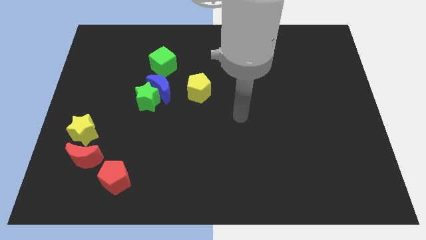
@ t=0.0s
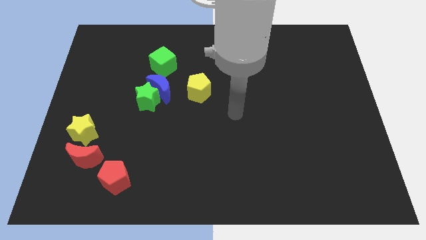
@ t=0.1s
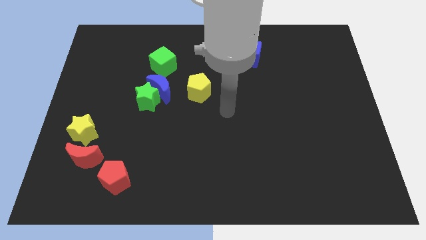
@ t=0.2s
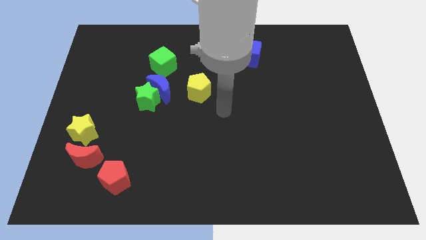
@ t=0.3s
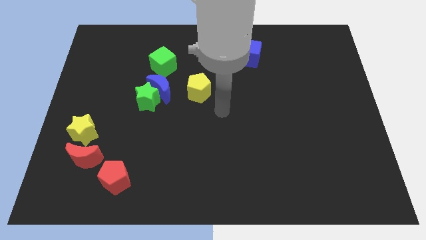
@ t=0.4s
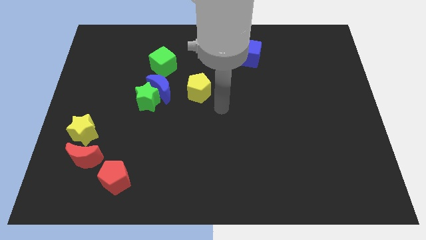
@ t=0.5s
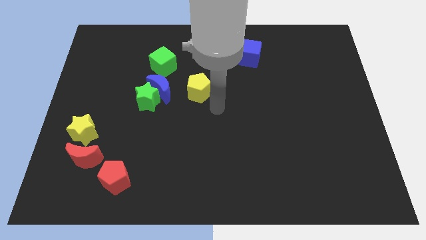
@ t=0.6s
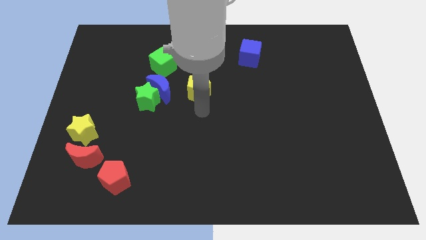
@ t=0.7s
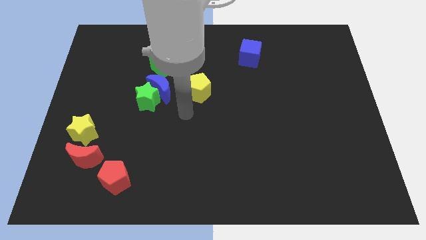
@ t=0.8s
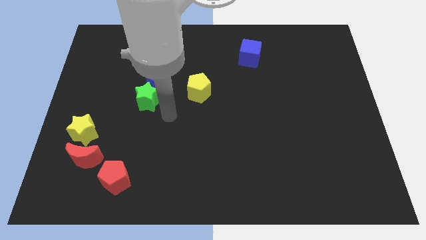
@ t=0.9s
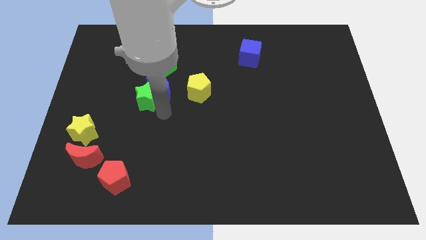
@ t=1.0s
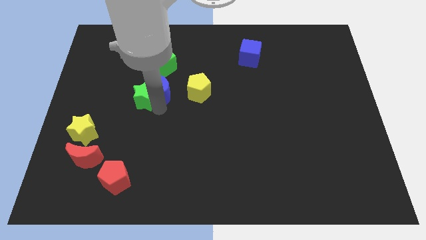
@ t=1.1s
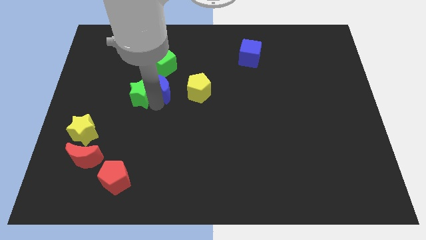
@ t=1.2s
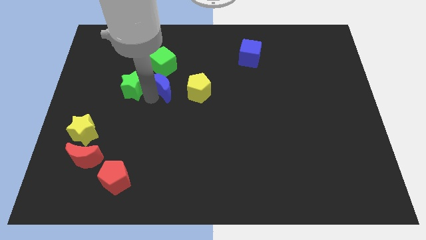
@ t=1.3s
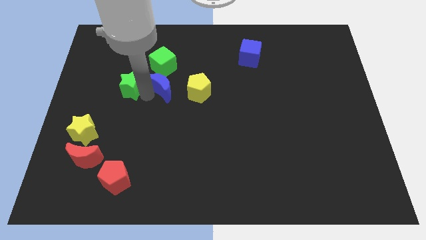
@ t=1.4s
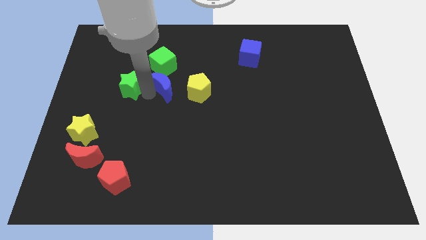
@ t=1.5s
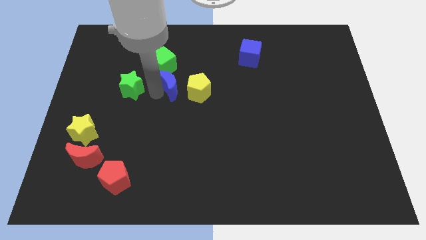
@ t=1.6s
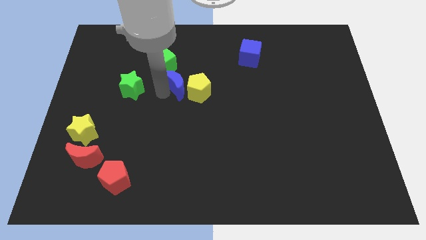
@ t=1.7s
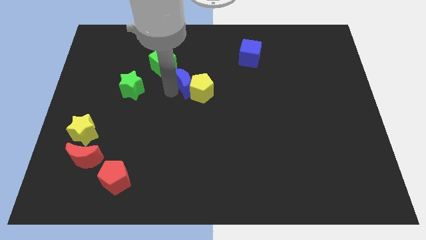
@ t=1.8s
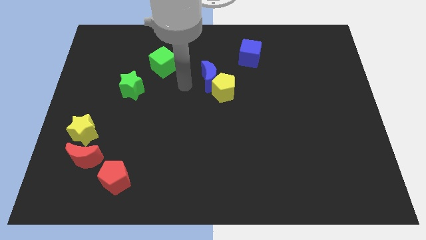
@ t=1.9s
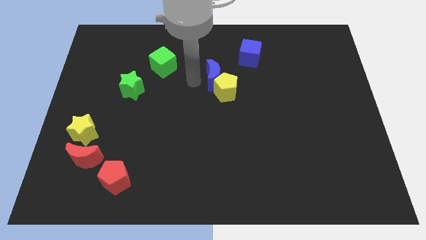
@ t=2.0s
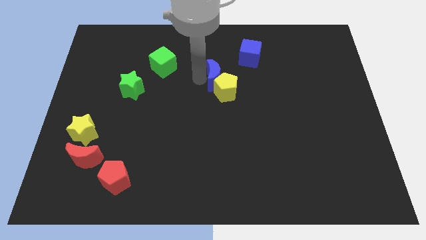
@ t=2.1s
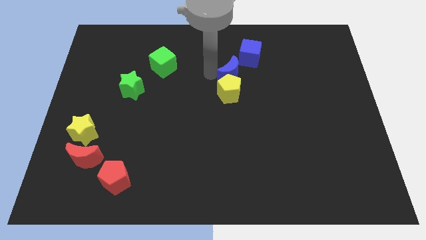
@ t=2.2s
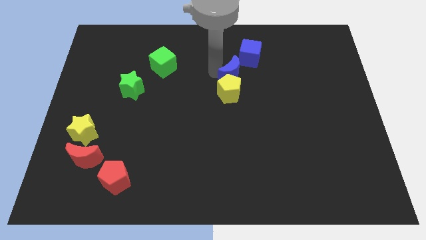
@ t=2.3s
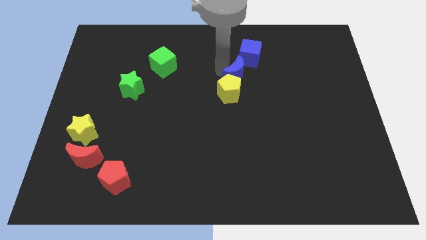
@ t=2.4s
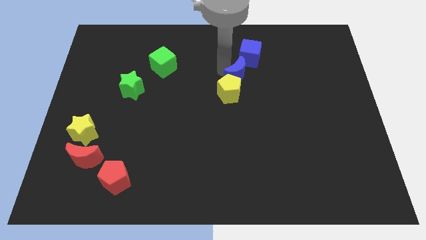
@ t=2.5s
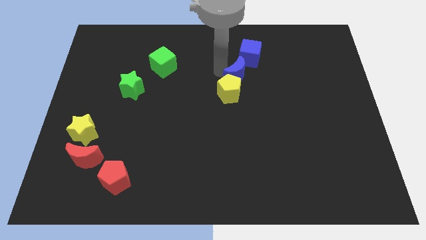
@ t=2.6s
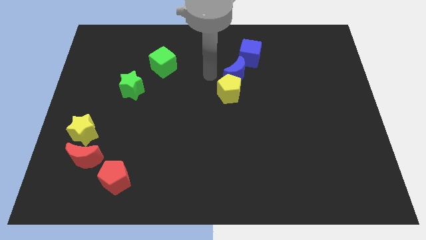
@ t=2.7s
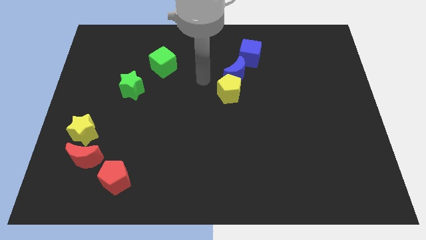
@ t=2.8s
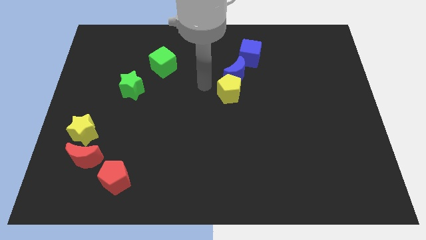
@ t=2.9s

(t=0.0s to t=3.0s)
separate green star and blue crescent from each other

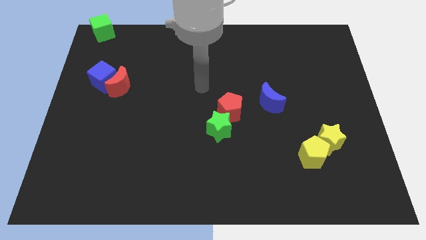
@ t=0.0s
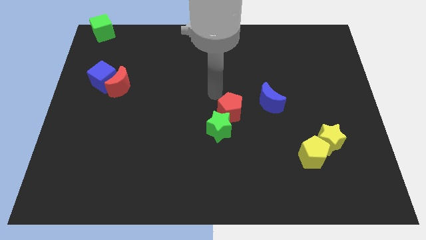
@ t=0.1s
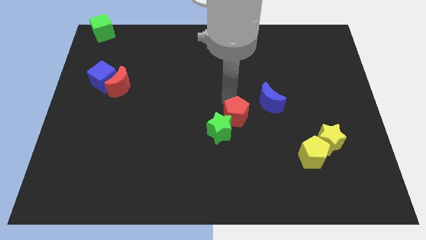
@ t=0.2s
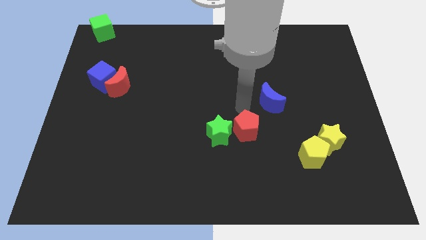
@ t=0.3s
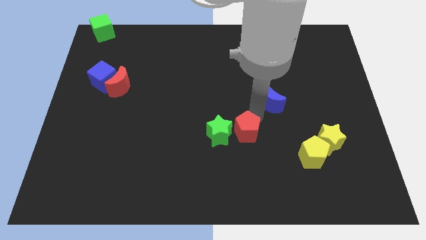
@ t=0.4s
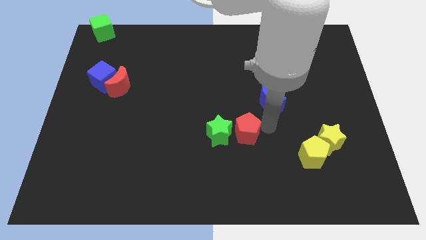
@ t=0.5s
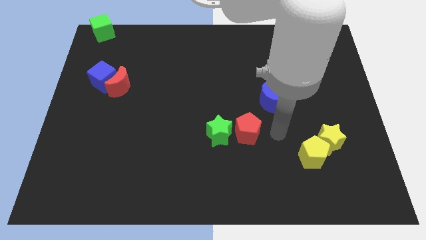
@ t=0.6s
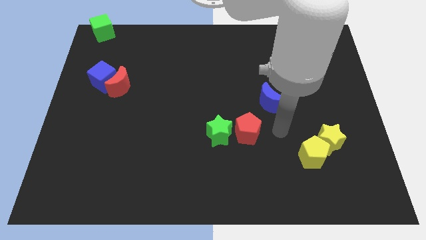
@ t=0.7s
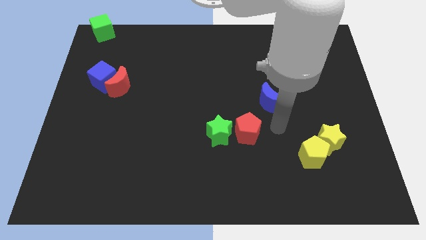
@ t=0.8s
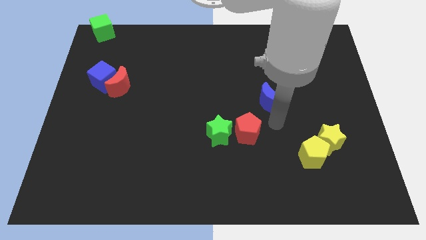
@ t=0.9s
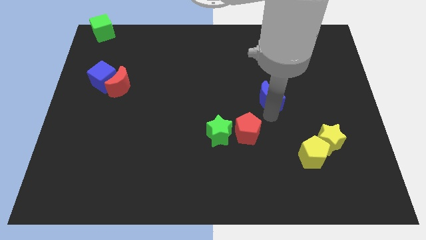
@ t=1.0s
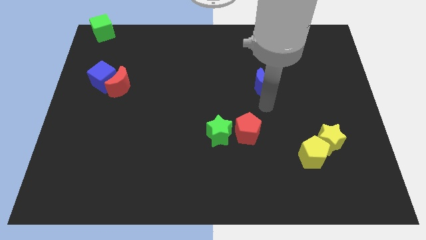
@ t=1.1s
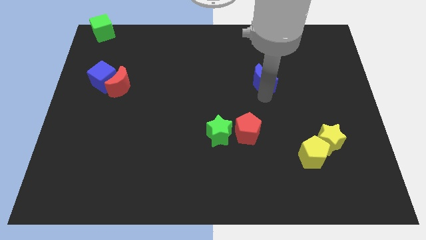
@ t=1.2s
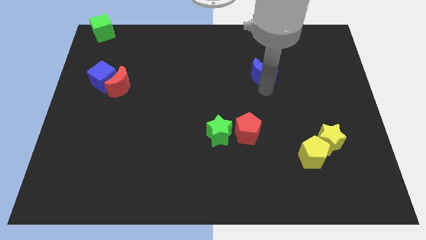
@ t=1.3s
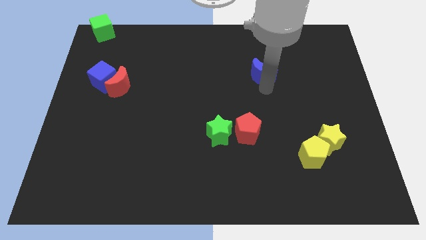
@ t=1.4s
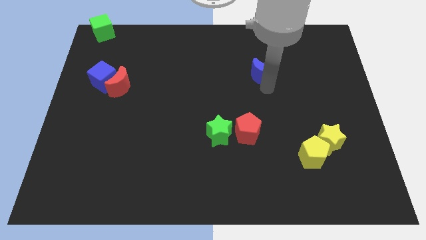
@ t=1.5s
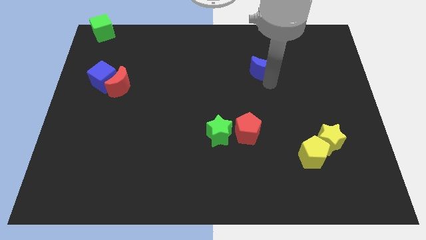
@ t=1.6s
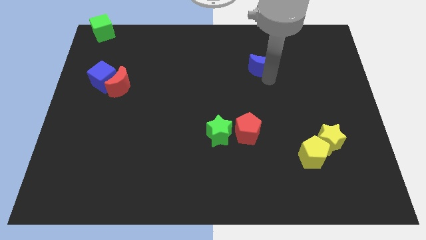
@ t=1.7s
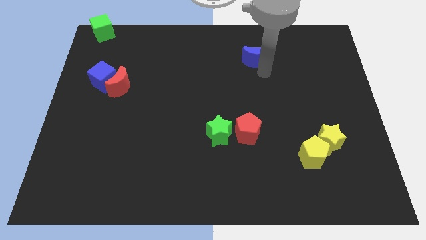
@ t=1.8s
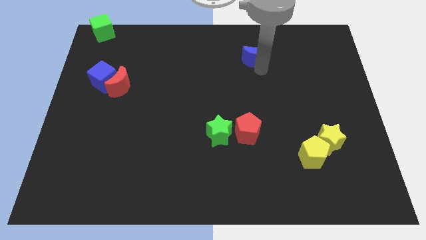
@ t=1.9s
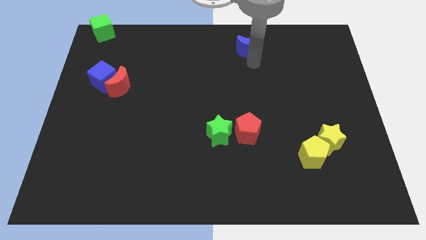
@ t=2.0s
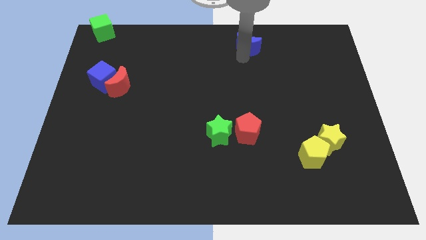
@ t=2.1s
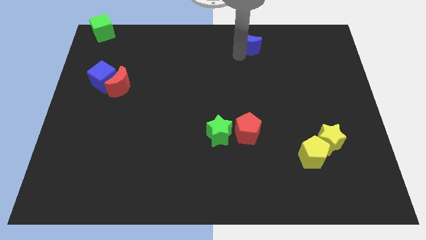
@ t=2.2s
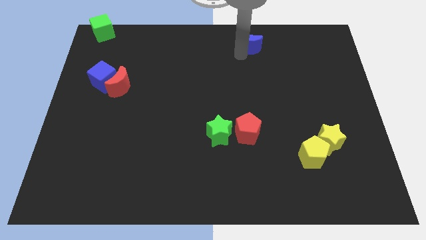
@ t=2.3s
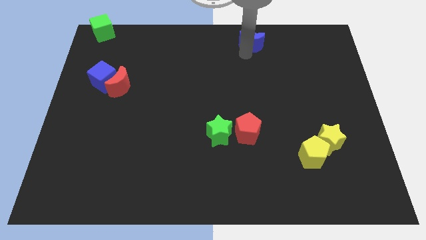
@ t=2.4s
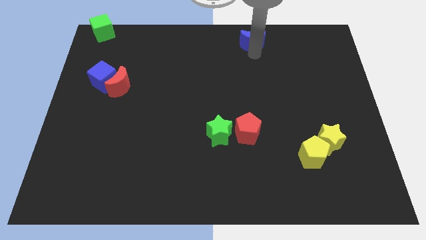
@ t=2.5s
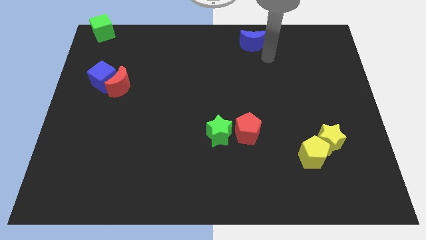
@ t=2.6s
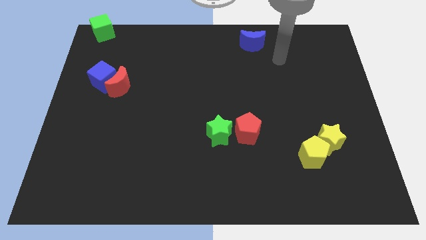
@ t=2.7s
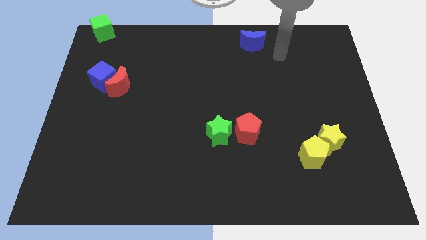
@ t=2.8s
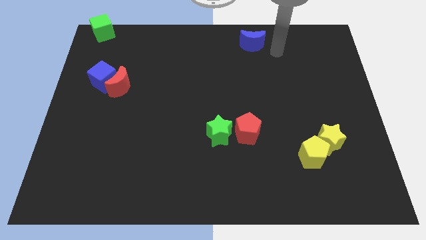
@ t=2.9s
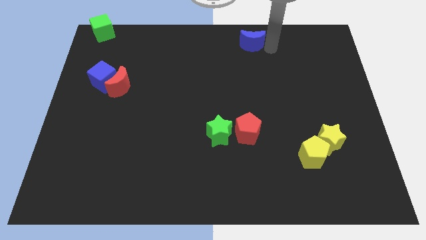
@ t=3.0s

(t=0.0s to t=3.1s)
slide the blue crescent slightly towards up

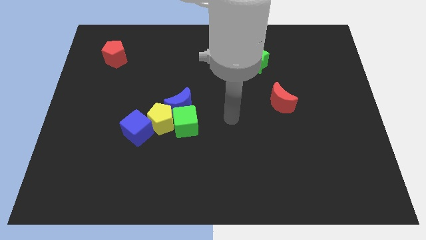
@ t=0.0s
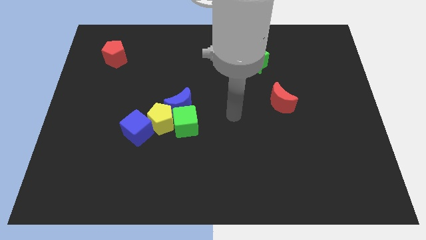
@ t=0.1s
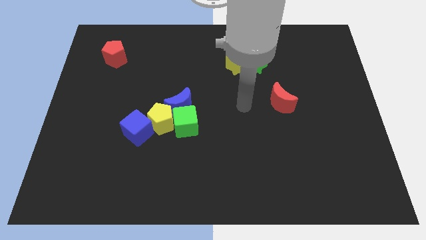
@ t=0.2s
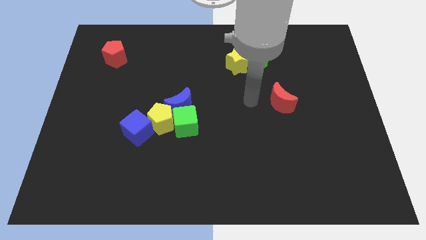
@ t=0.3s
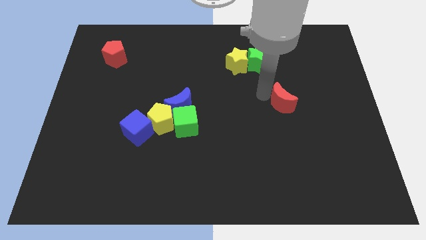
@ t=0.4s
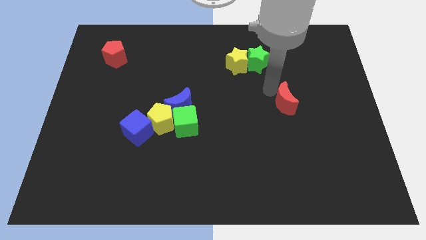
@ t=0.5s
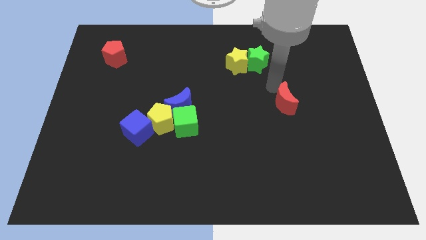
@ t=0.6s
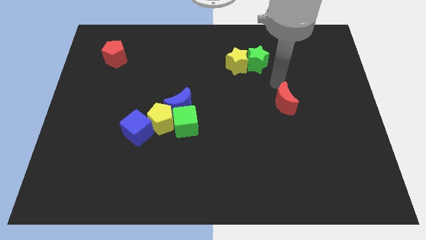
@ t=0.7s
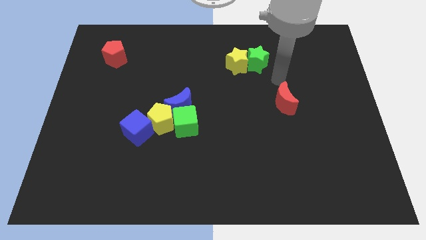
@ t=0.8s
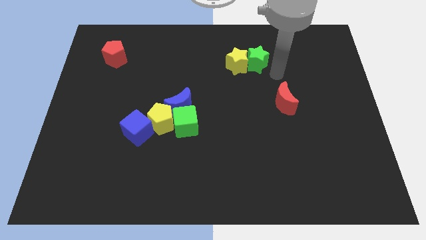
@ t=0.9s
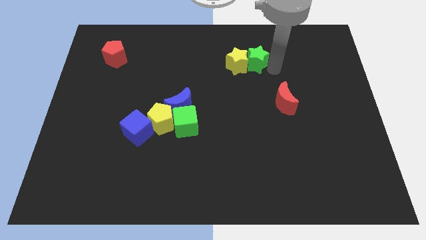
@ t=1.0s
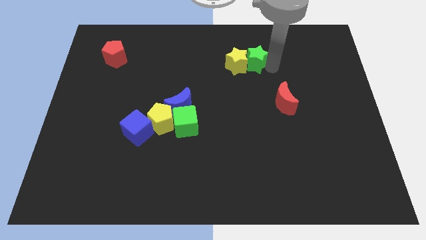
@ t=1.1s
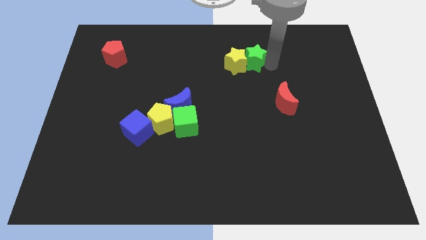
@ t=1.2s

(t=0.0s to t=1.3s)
touch the right side of the green star

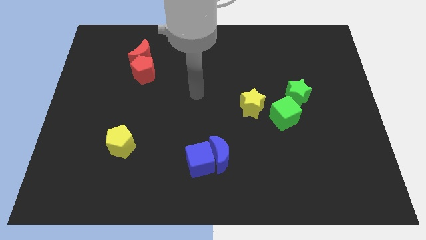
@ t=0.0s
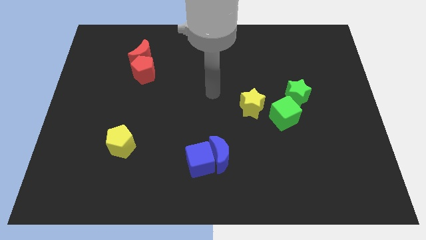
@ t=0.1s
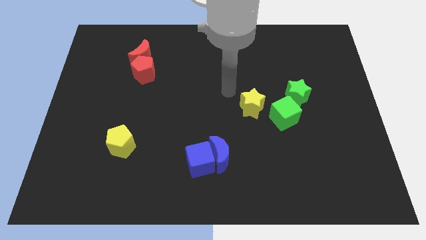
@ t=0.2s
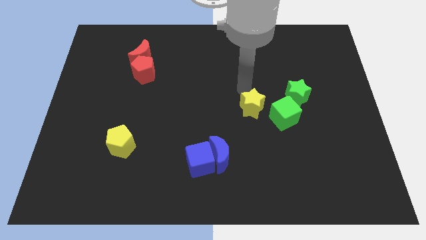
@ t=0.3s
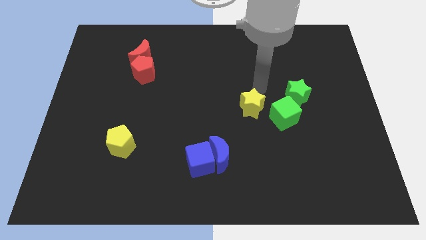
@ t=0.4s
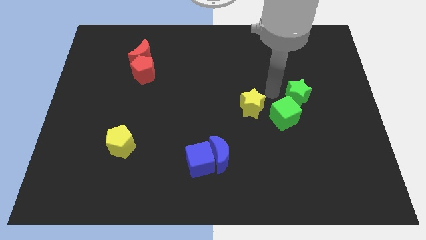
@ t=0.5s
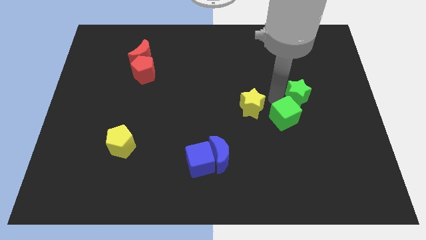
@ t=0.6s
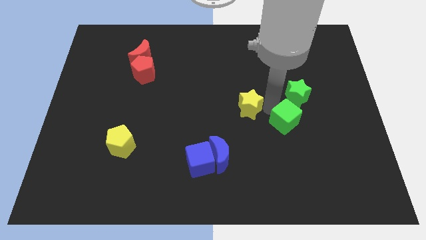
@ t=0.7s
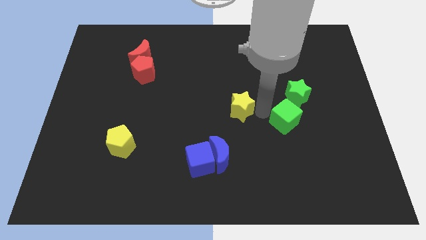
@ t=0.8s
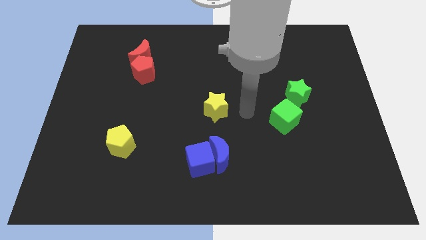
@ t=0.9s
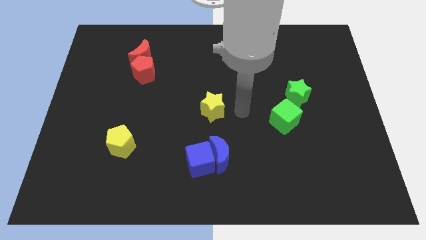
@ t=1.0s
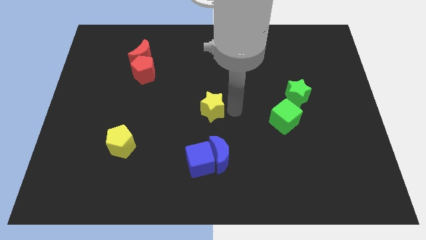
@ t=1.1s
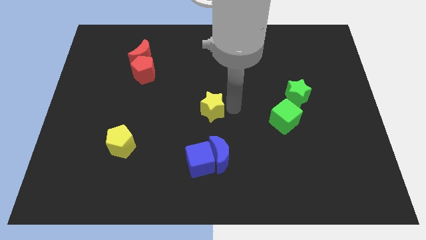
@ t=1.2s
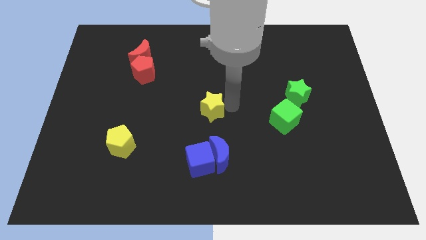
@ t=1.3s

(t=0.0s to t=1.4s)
move the yellow star to the center of the board

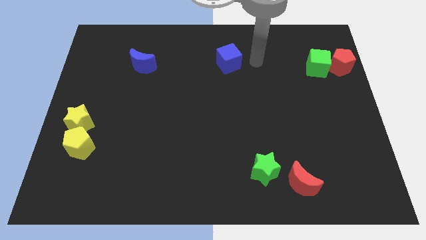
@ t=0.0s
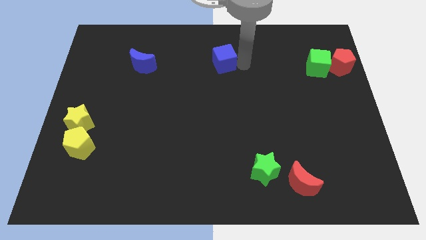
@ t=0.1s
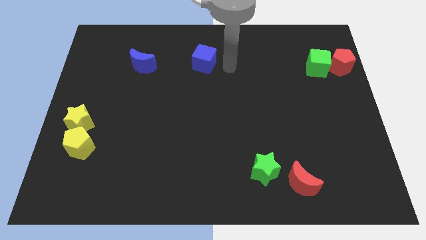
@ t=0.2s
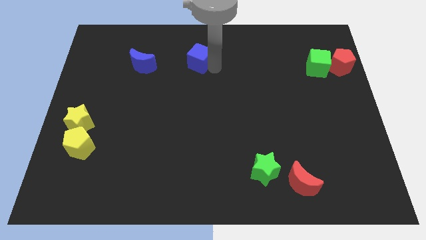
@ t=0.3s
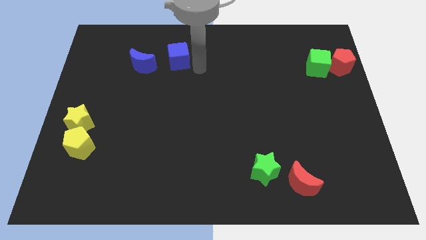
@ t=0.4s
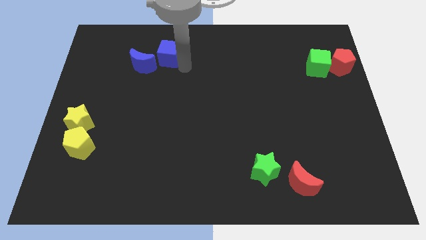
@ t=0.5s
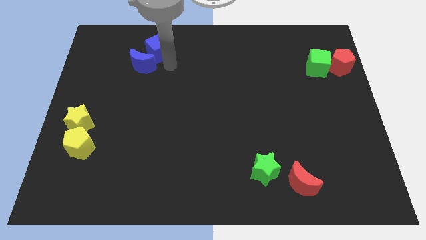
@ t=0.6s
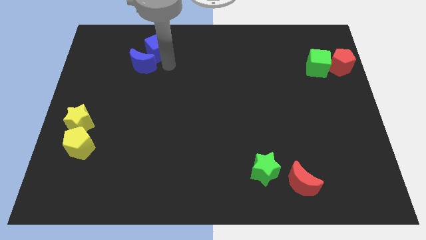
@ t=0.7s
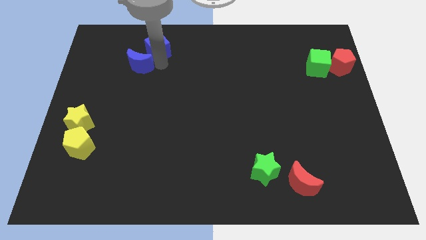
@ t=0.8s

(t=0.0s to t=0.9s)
move the blue cube close to the blue crescent
